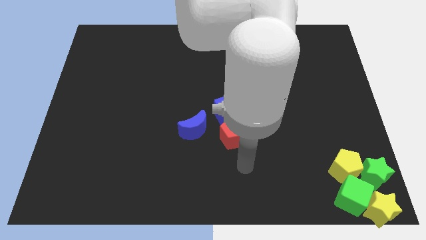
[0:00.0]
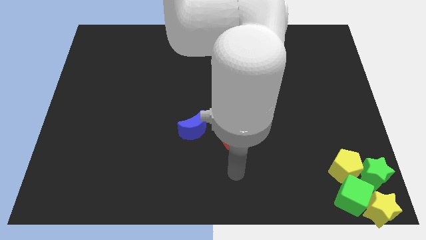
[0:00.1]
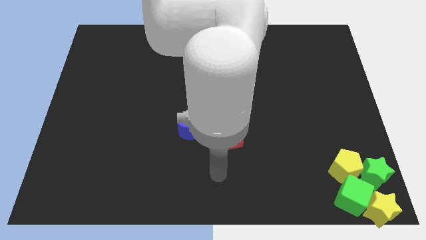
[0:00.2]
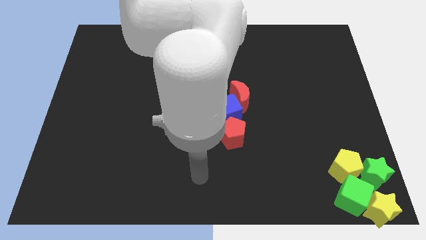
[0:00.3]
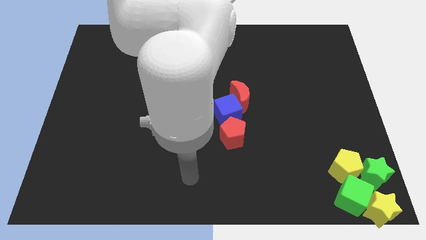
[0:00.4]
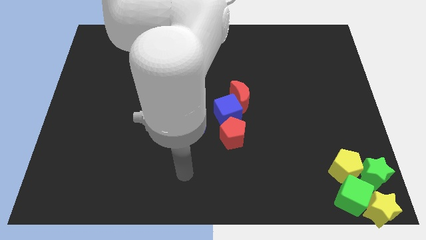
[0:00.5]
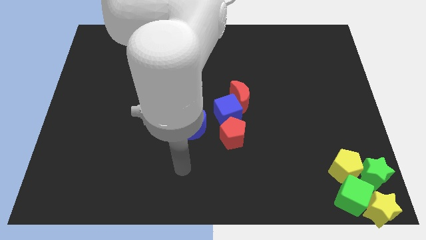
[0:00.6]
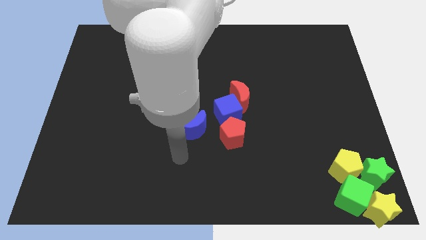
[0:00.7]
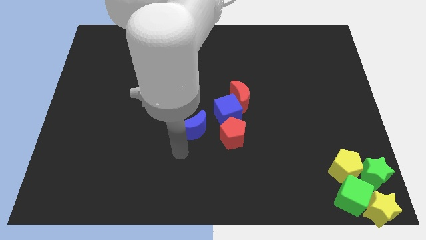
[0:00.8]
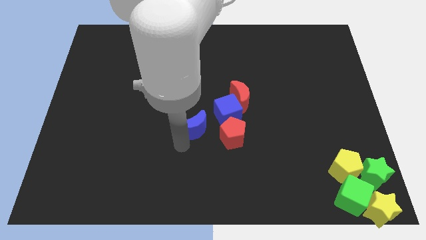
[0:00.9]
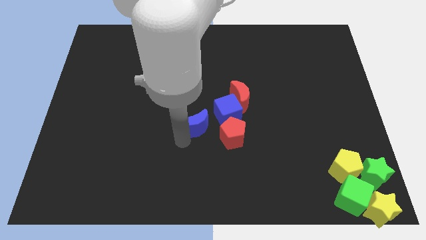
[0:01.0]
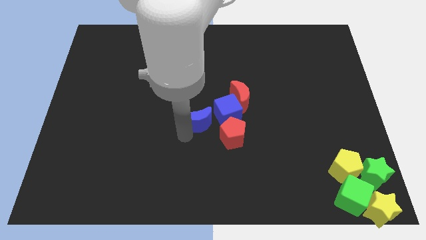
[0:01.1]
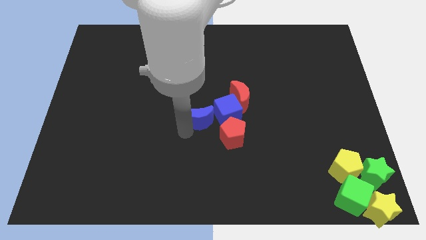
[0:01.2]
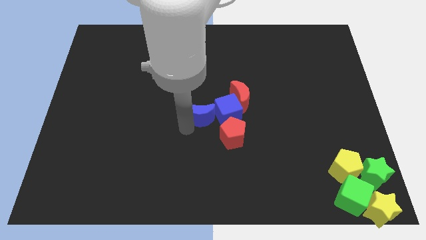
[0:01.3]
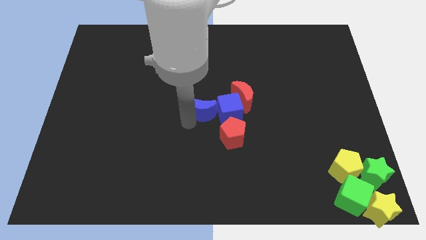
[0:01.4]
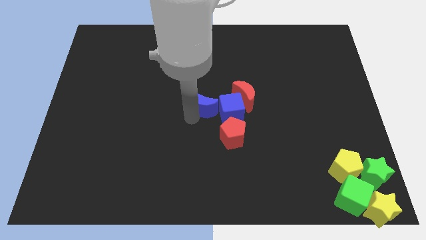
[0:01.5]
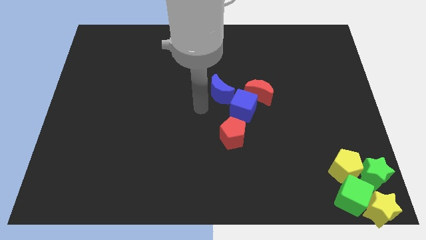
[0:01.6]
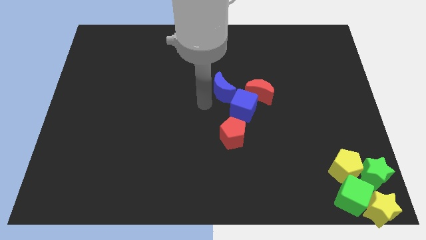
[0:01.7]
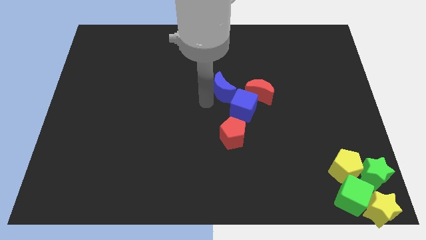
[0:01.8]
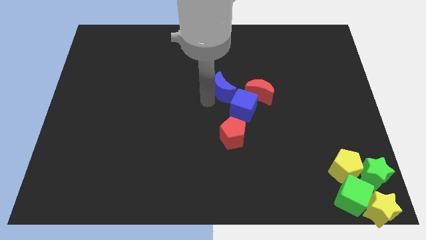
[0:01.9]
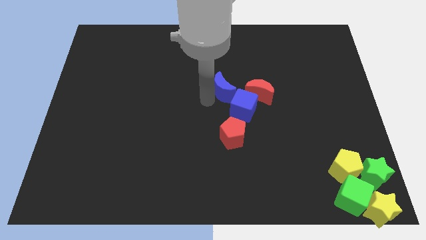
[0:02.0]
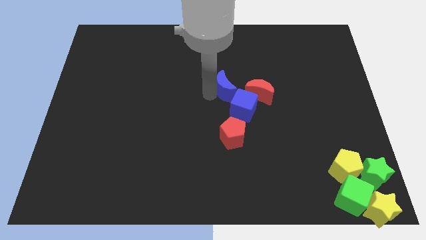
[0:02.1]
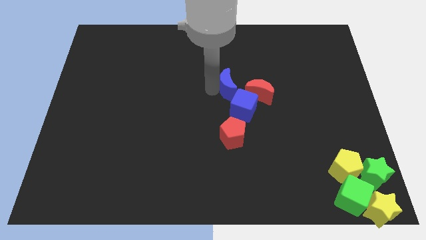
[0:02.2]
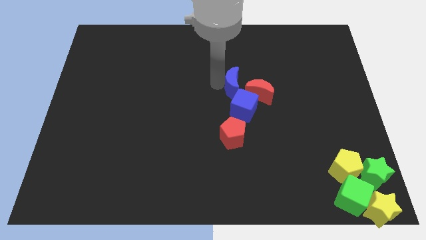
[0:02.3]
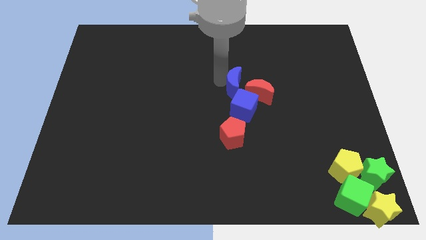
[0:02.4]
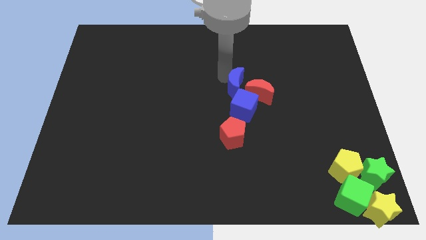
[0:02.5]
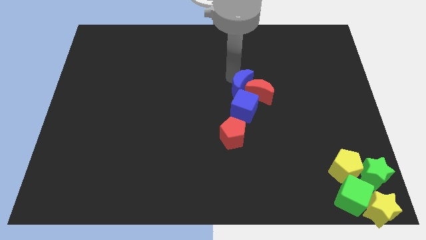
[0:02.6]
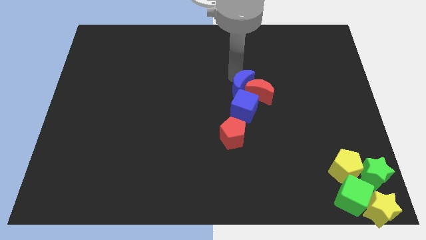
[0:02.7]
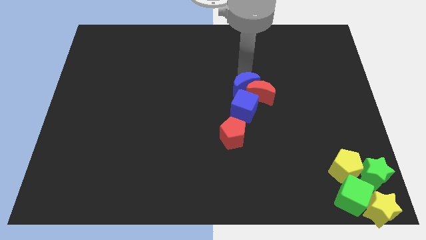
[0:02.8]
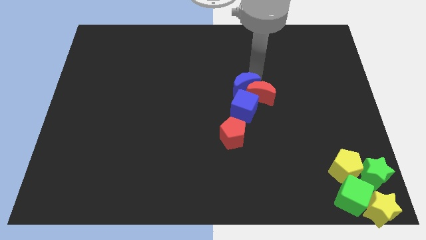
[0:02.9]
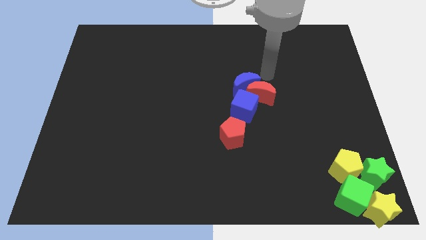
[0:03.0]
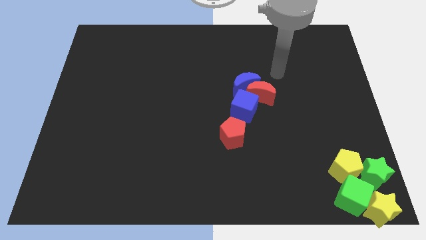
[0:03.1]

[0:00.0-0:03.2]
move the blue moon to the top right side of the red moon

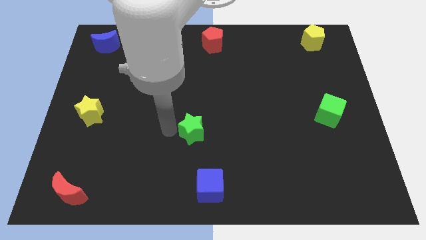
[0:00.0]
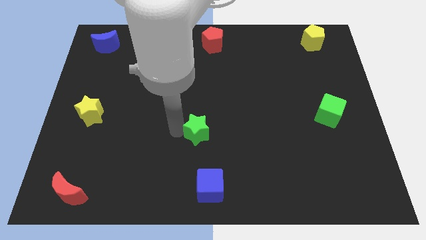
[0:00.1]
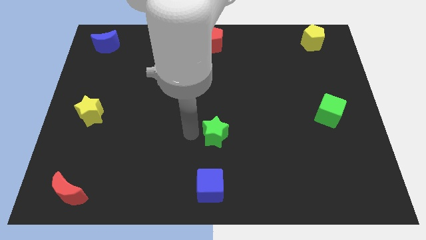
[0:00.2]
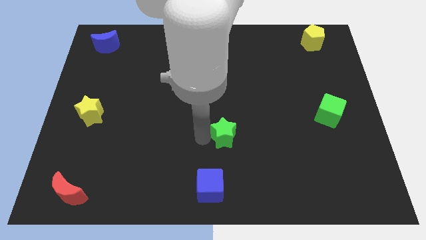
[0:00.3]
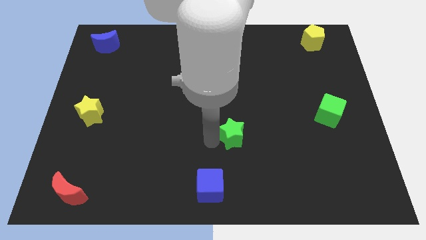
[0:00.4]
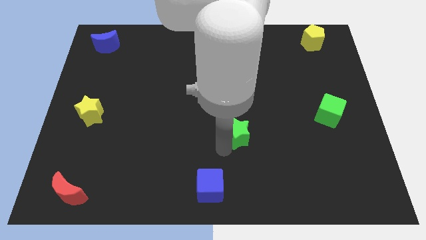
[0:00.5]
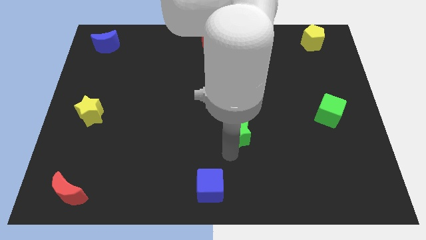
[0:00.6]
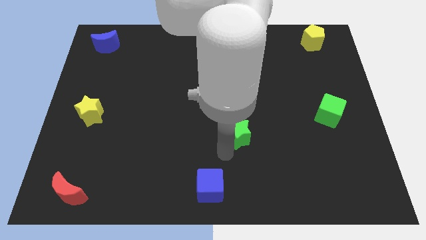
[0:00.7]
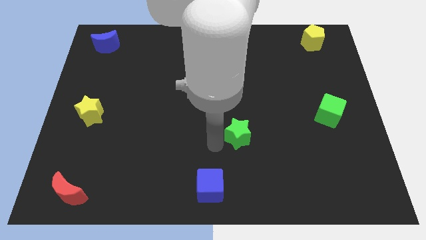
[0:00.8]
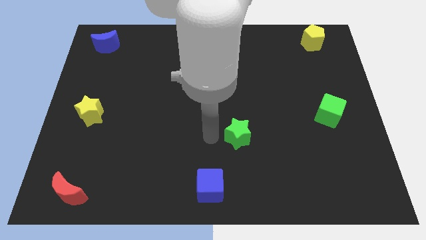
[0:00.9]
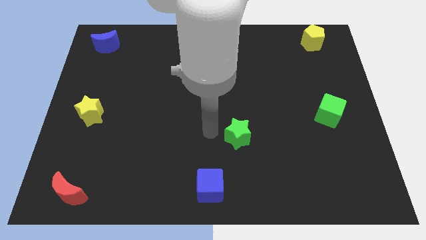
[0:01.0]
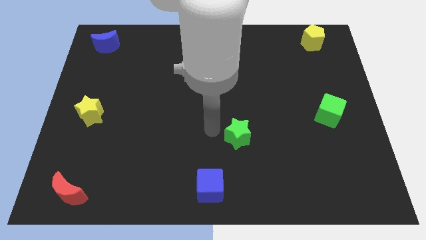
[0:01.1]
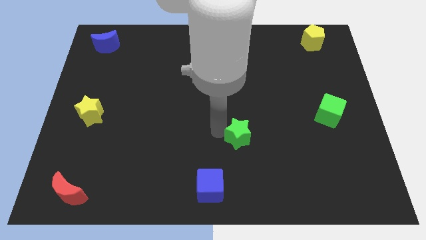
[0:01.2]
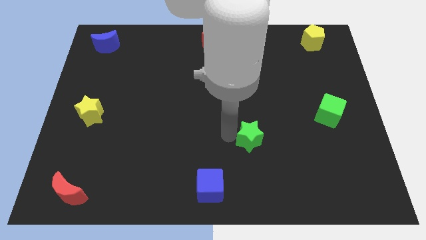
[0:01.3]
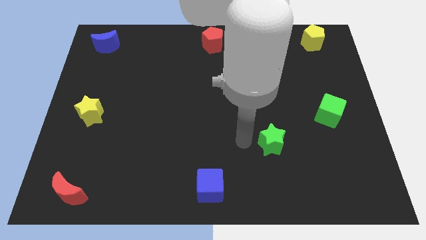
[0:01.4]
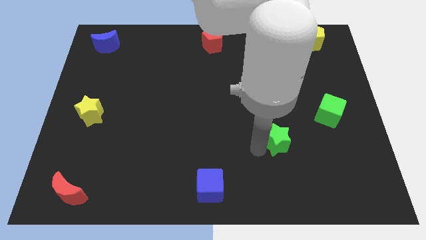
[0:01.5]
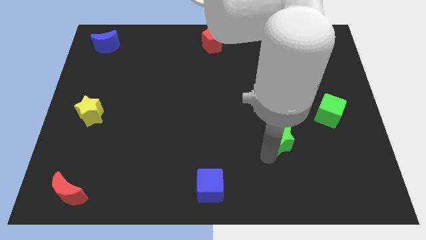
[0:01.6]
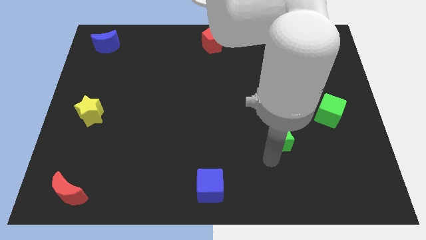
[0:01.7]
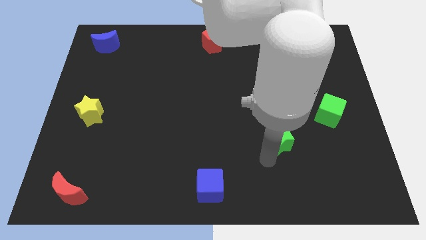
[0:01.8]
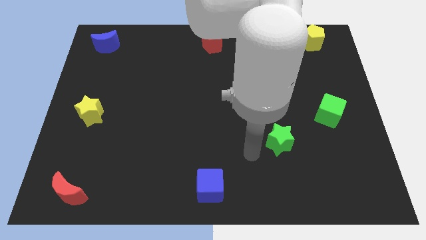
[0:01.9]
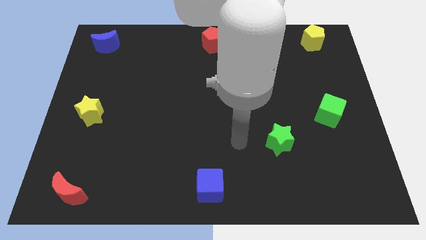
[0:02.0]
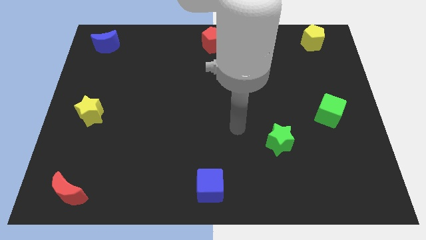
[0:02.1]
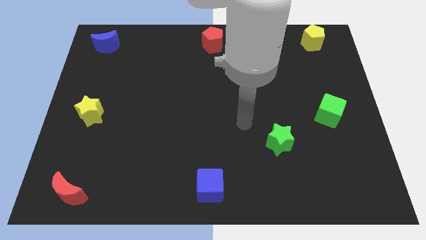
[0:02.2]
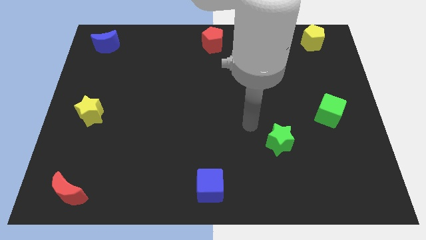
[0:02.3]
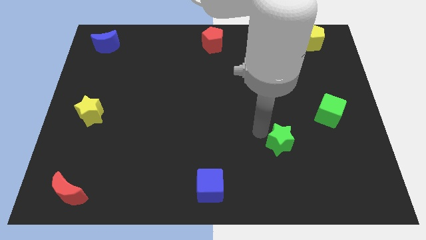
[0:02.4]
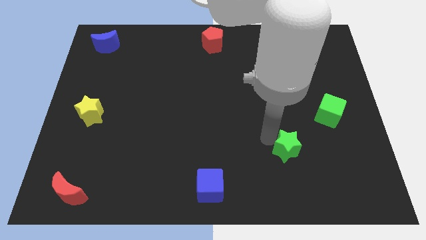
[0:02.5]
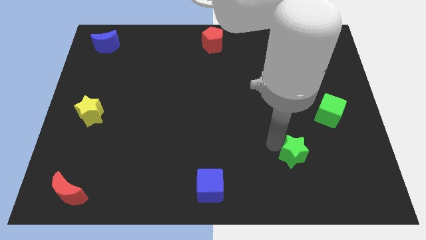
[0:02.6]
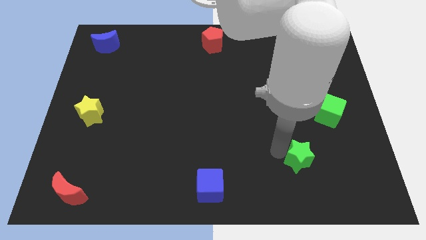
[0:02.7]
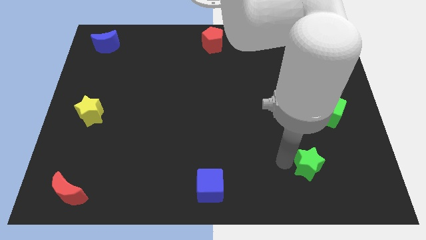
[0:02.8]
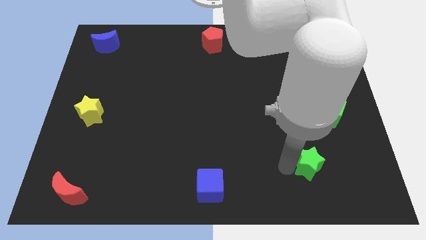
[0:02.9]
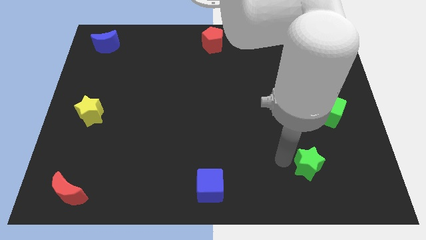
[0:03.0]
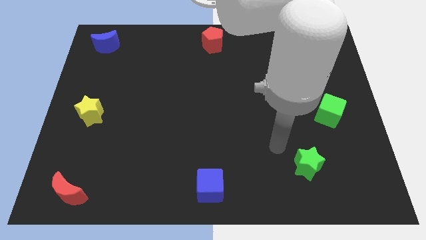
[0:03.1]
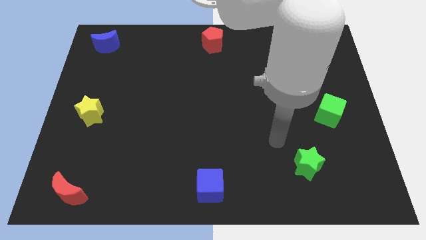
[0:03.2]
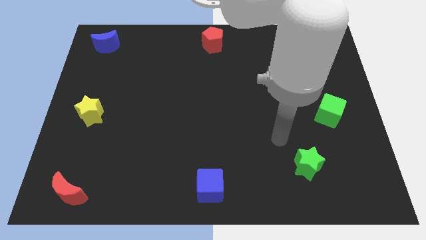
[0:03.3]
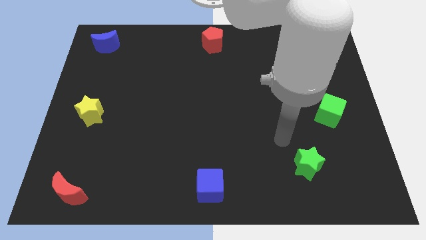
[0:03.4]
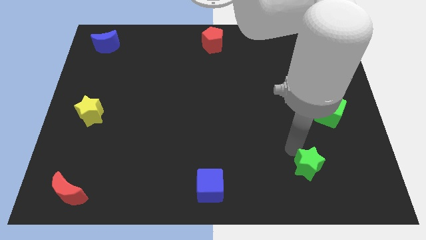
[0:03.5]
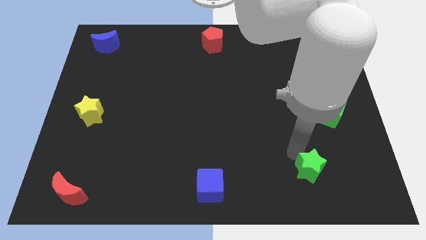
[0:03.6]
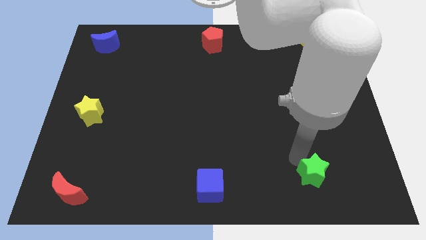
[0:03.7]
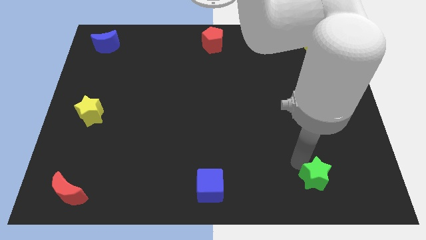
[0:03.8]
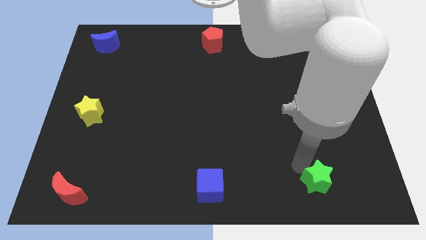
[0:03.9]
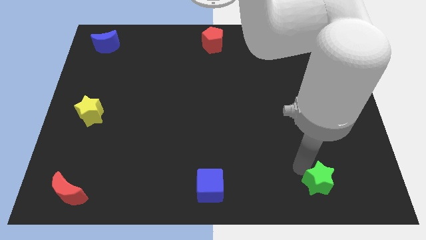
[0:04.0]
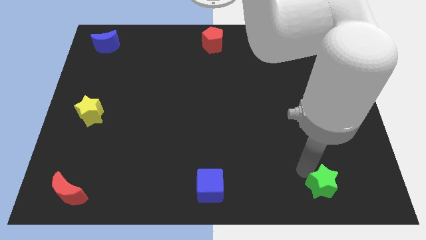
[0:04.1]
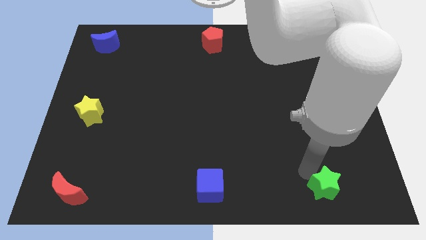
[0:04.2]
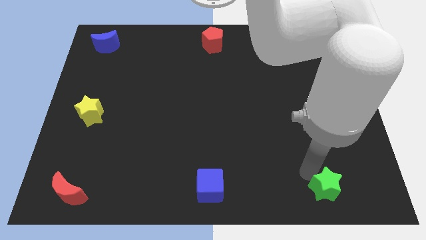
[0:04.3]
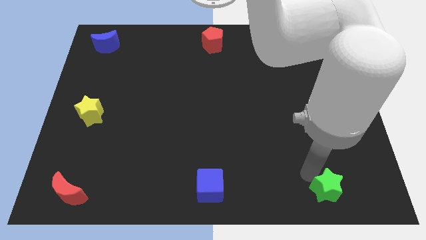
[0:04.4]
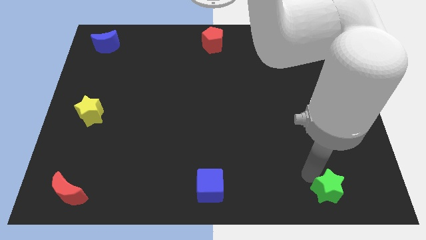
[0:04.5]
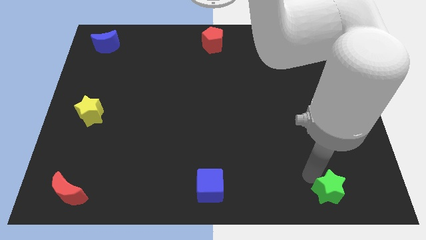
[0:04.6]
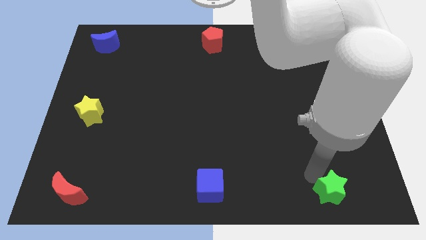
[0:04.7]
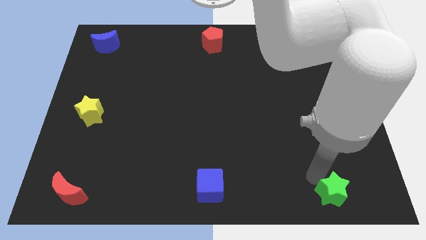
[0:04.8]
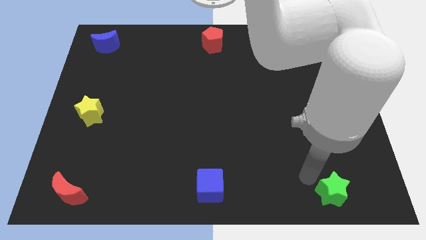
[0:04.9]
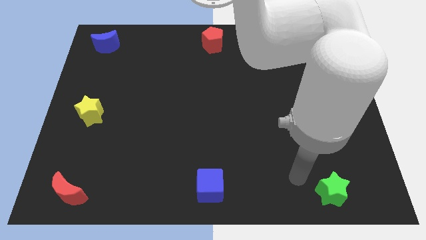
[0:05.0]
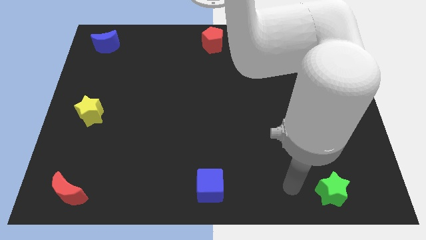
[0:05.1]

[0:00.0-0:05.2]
place the green star at the right side of the blue cube

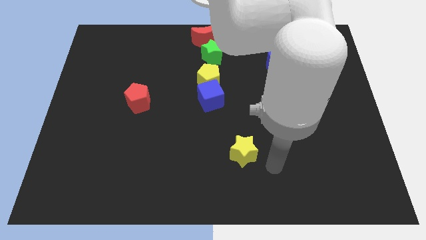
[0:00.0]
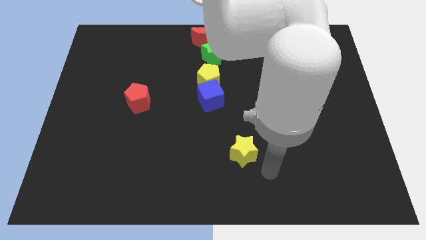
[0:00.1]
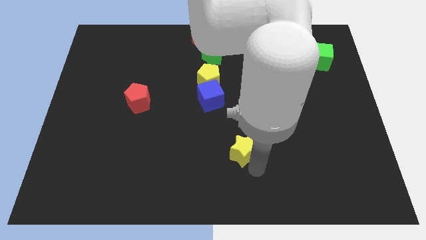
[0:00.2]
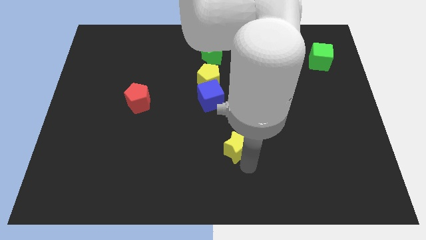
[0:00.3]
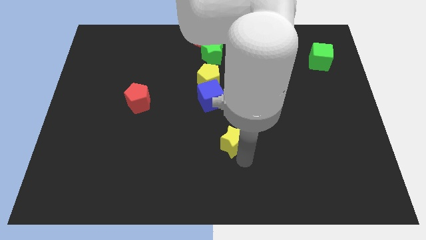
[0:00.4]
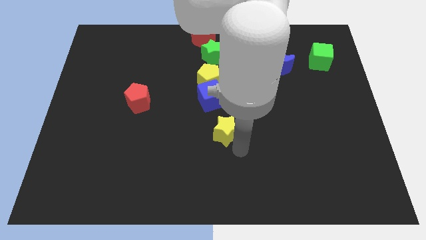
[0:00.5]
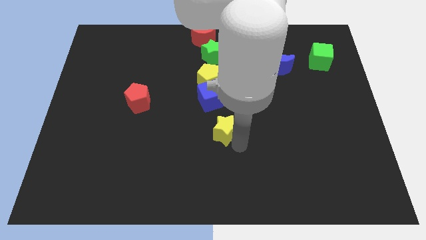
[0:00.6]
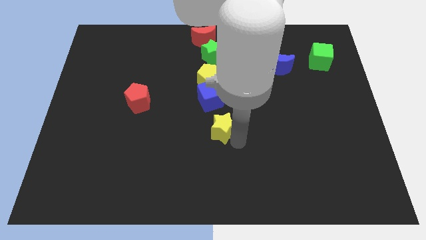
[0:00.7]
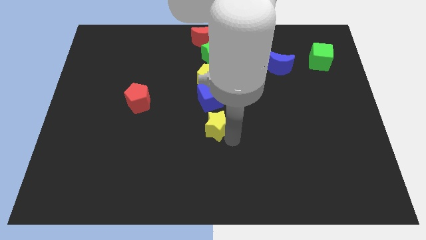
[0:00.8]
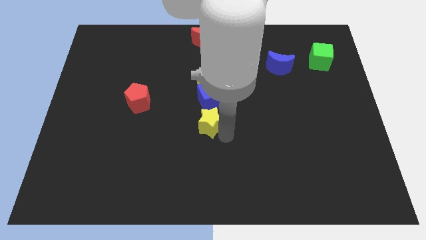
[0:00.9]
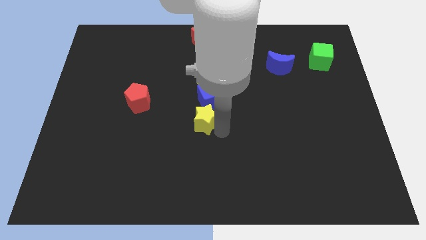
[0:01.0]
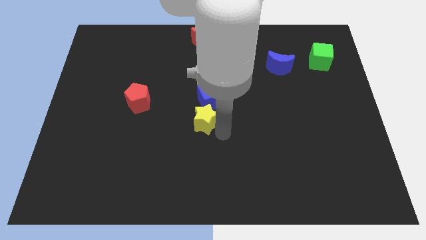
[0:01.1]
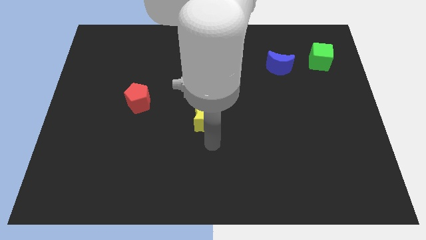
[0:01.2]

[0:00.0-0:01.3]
place the yellow star below the blue cube
